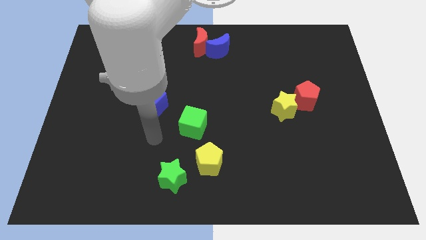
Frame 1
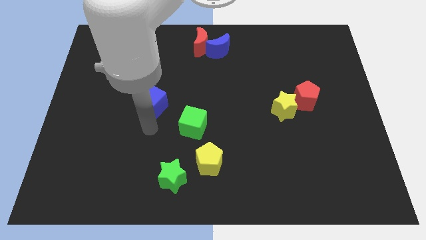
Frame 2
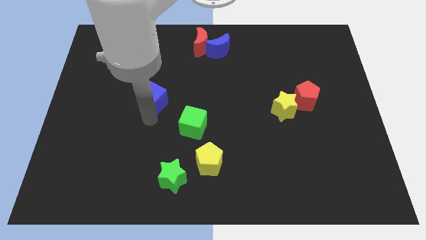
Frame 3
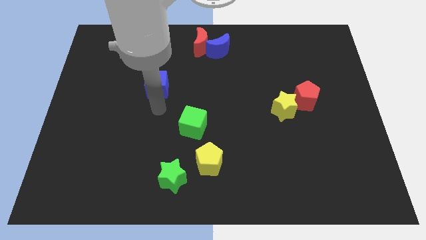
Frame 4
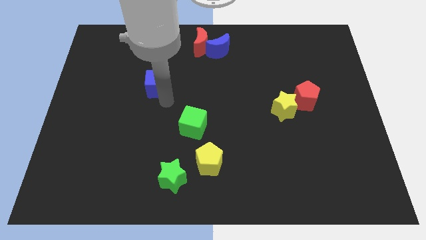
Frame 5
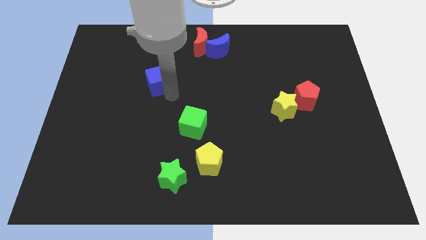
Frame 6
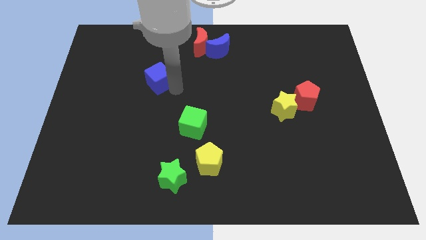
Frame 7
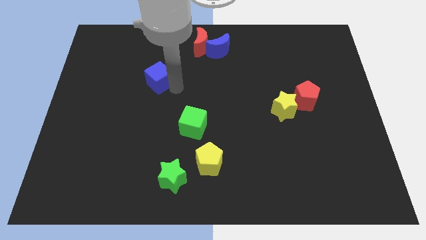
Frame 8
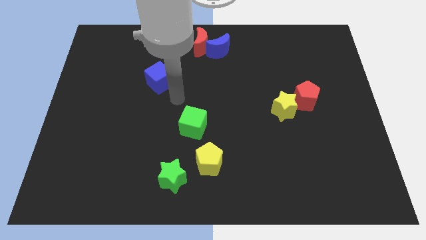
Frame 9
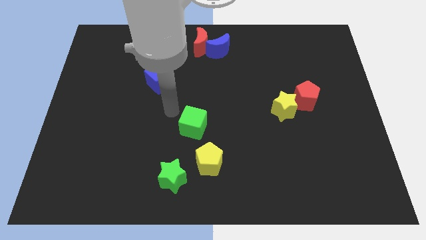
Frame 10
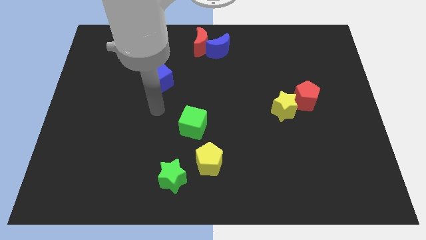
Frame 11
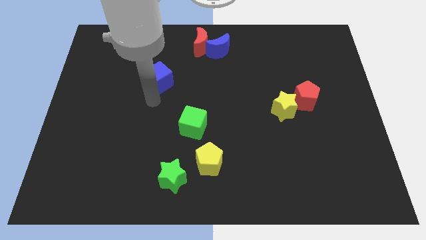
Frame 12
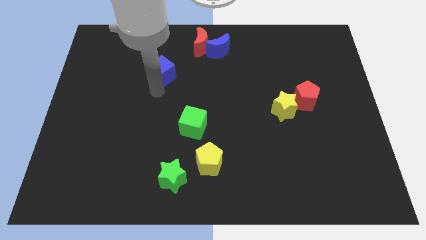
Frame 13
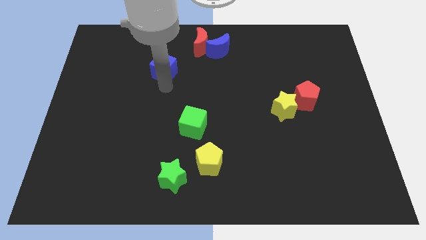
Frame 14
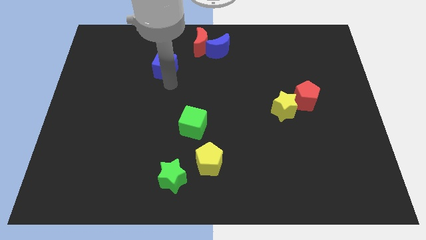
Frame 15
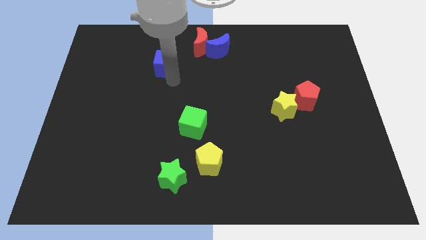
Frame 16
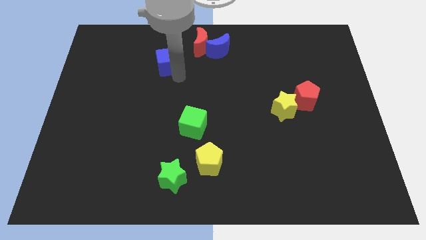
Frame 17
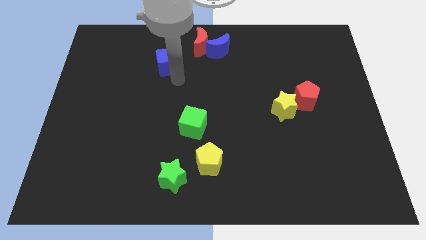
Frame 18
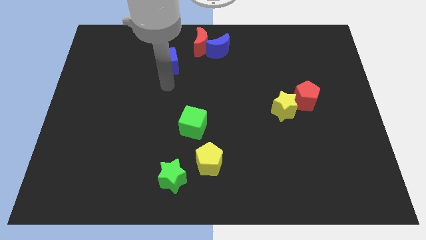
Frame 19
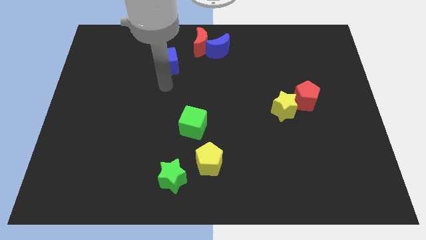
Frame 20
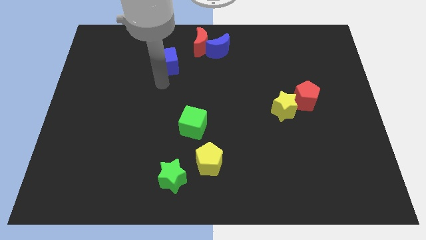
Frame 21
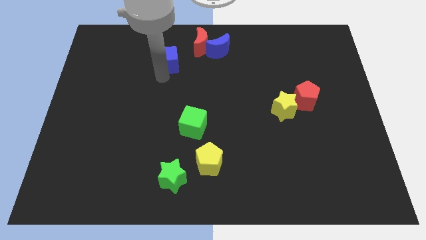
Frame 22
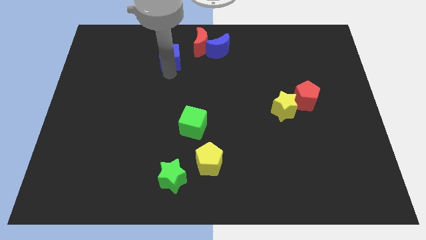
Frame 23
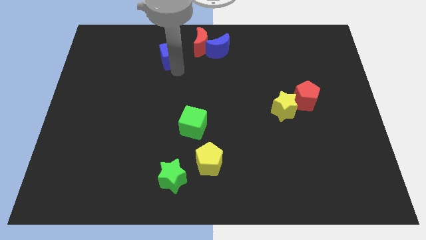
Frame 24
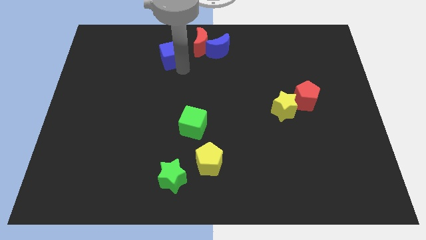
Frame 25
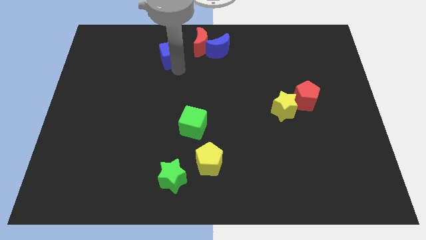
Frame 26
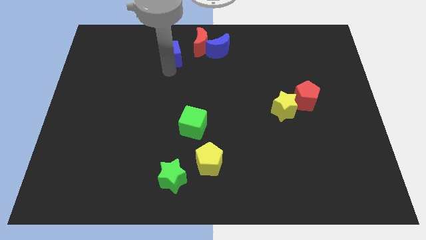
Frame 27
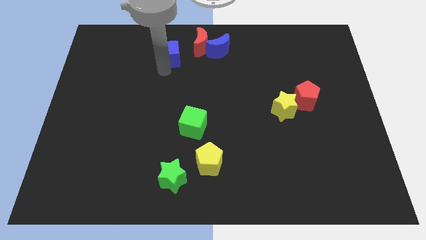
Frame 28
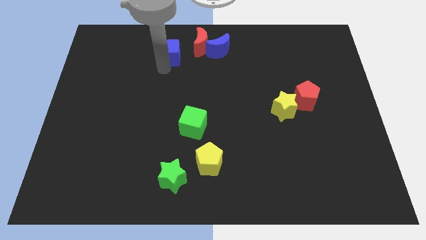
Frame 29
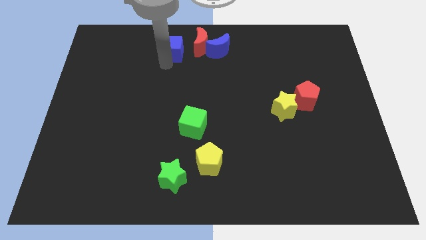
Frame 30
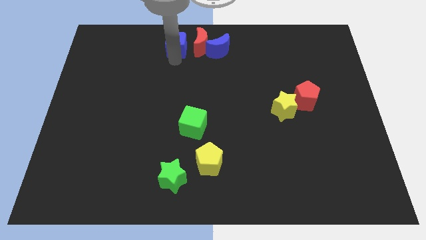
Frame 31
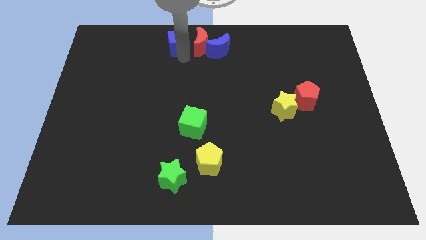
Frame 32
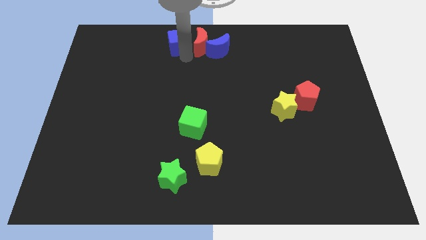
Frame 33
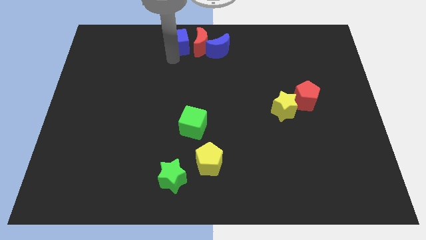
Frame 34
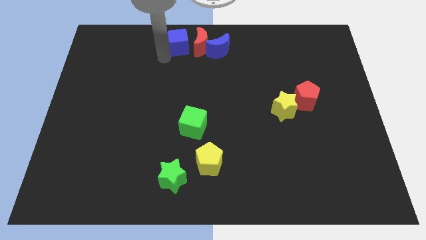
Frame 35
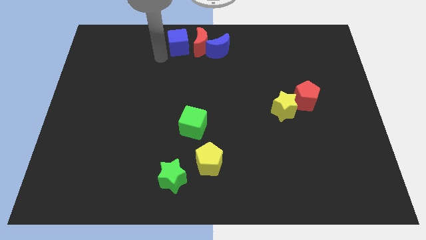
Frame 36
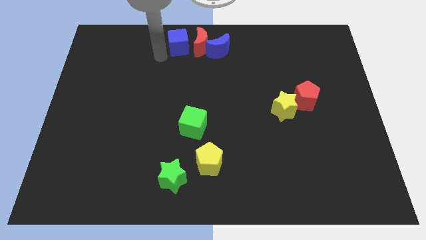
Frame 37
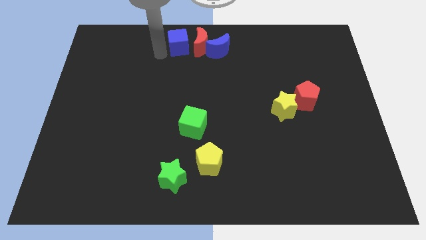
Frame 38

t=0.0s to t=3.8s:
push blue cube beside red moon

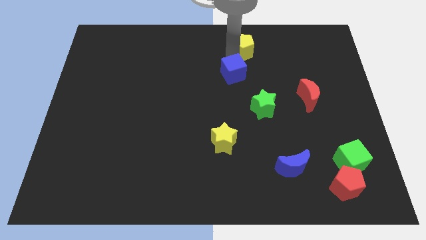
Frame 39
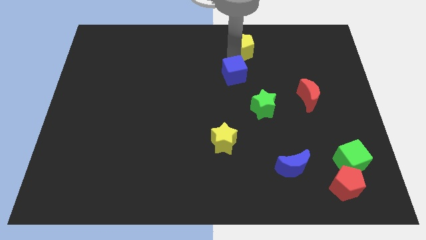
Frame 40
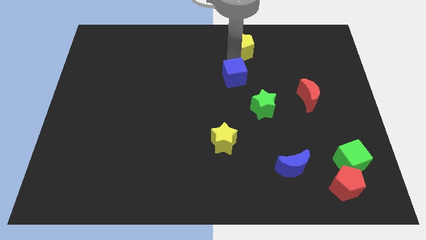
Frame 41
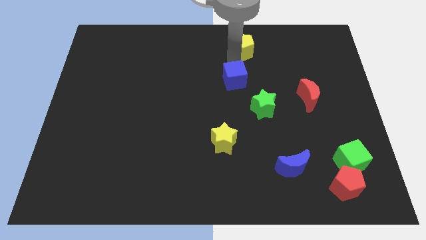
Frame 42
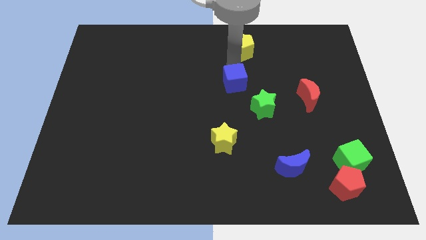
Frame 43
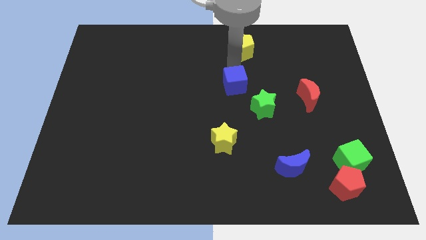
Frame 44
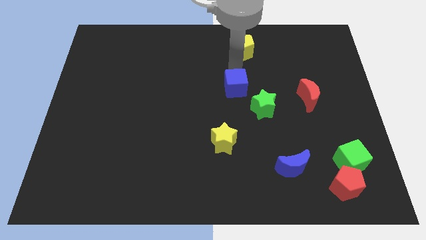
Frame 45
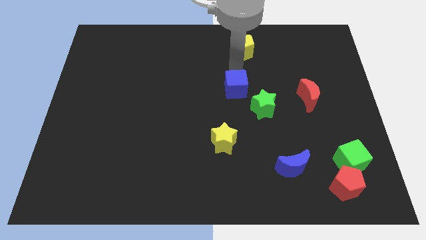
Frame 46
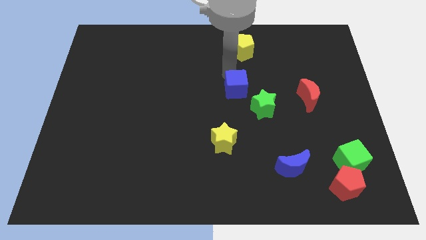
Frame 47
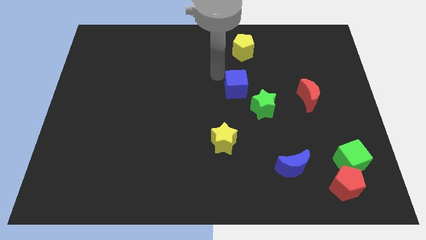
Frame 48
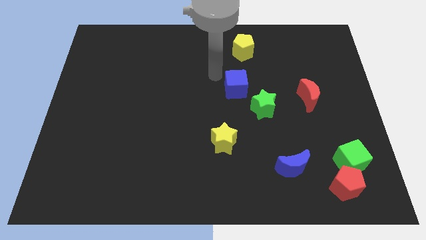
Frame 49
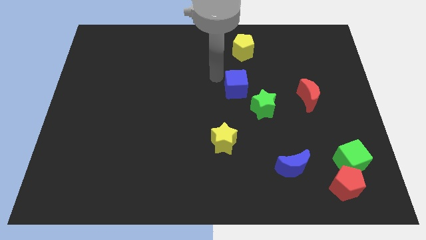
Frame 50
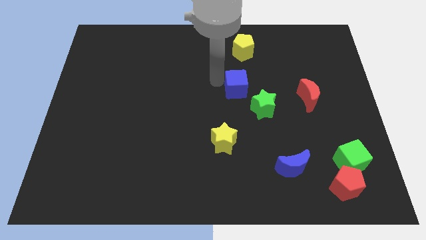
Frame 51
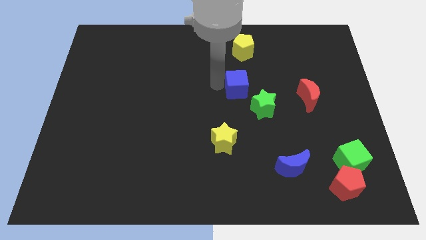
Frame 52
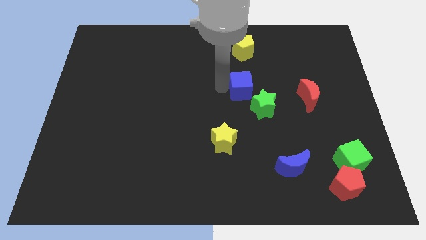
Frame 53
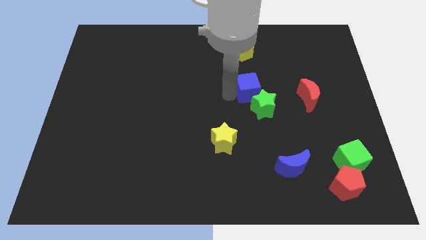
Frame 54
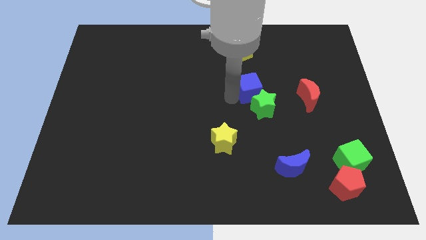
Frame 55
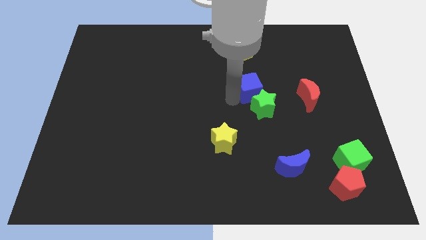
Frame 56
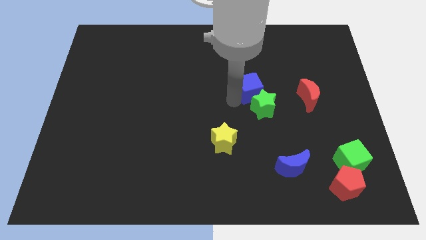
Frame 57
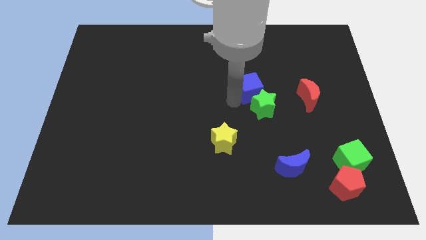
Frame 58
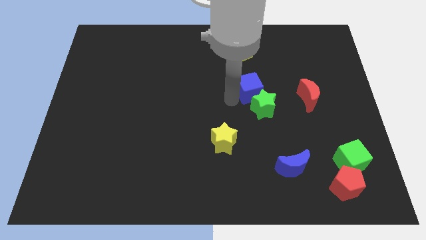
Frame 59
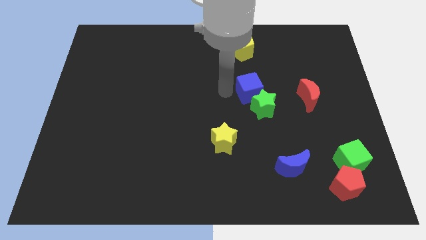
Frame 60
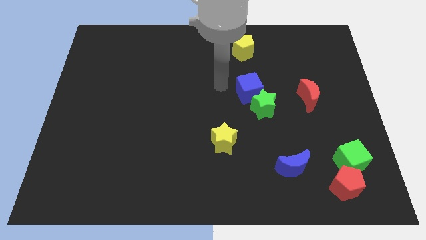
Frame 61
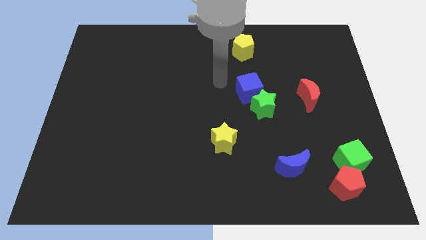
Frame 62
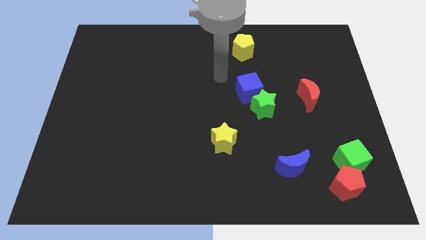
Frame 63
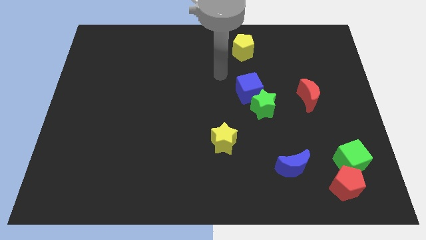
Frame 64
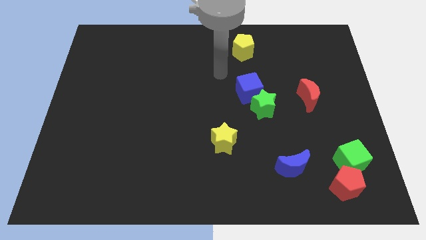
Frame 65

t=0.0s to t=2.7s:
move the blue cube into the green star

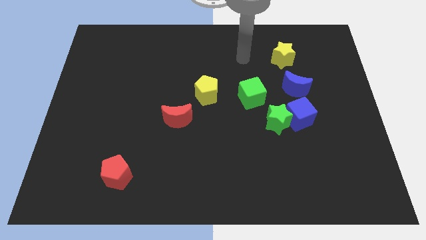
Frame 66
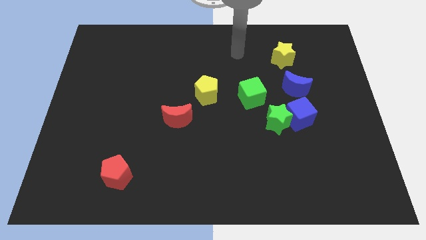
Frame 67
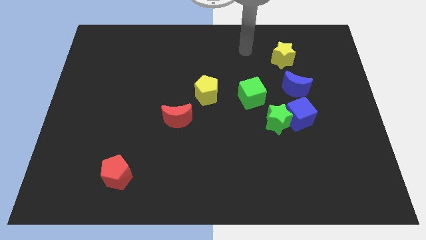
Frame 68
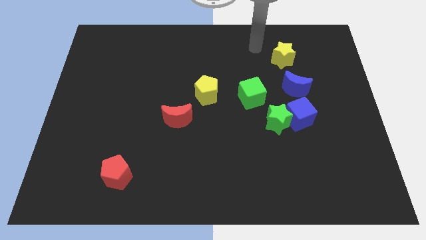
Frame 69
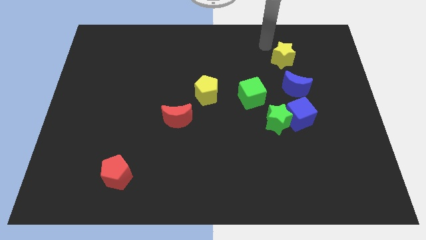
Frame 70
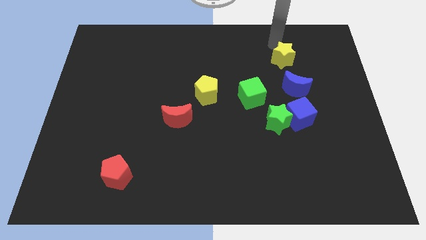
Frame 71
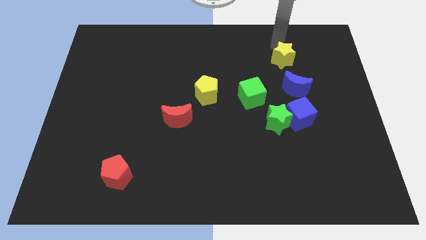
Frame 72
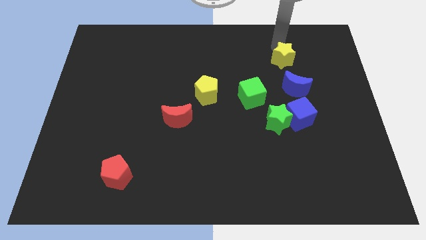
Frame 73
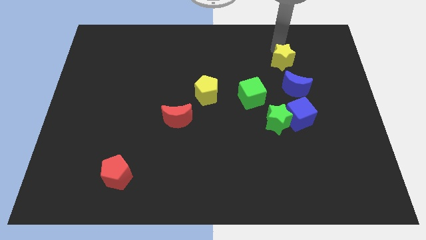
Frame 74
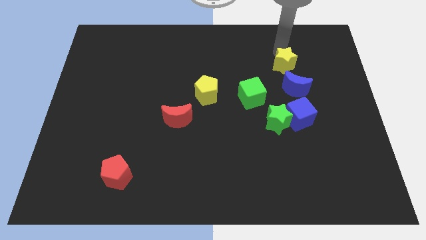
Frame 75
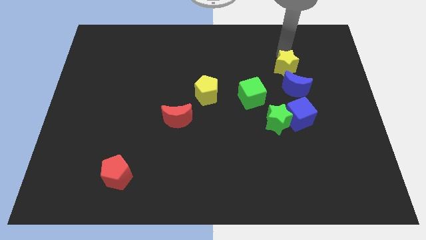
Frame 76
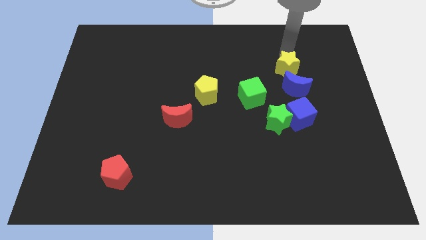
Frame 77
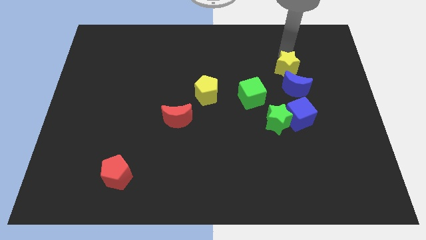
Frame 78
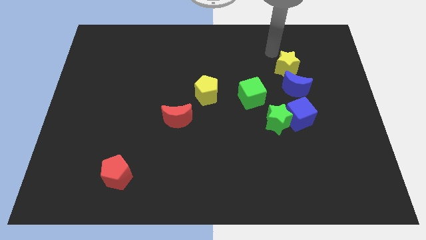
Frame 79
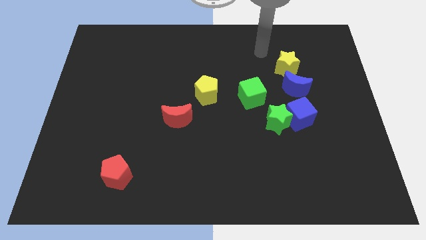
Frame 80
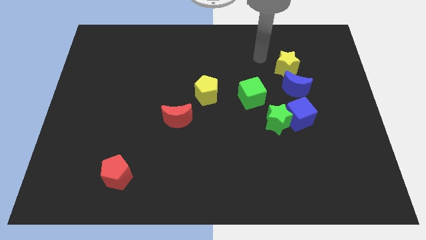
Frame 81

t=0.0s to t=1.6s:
move the yellow star close to the blue moon

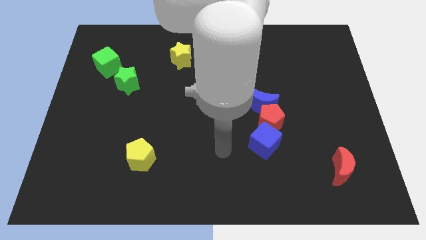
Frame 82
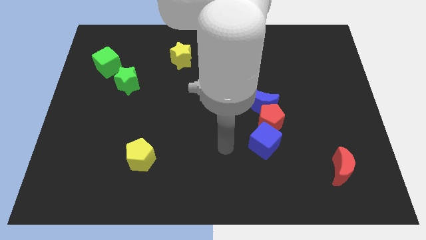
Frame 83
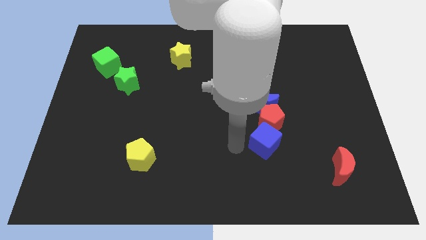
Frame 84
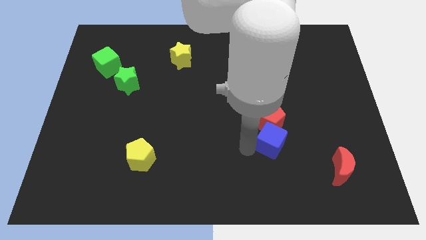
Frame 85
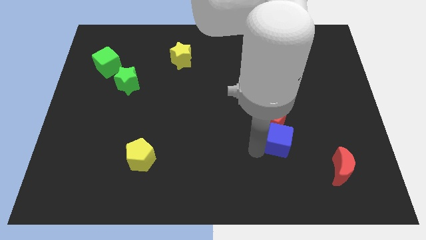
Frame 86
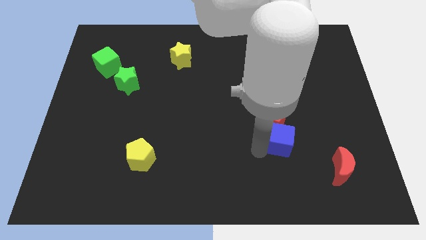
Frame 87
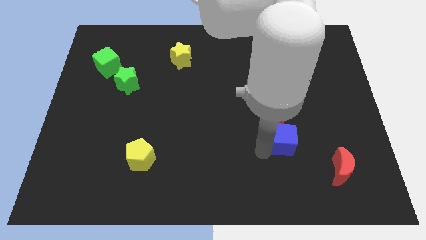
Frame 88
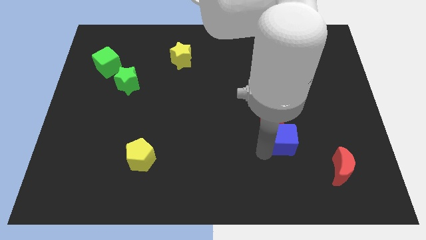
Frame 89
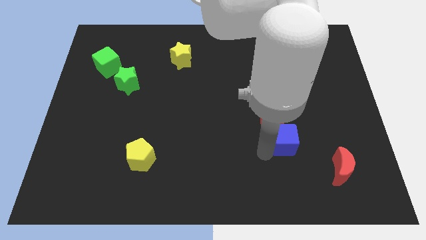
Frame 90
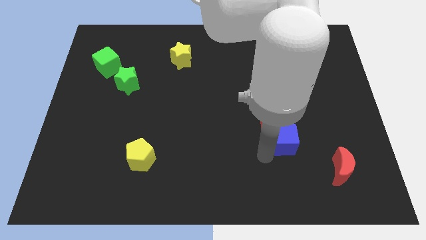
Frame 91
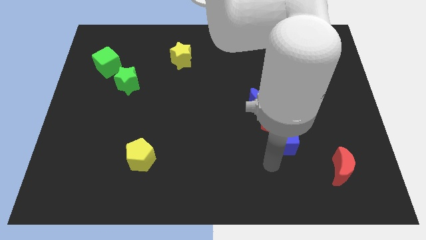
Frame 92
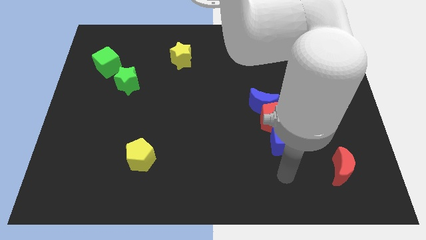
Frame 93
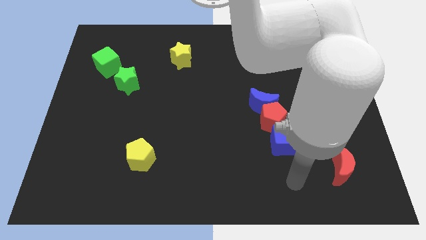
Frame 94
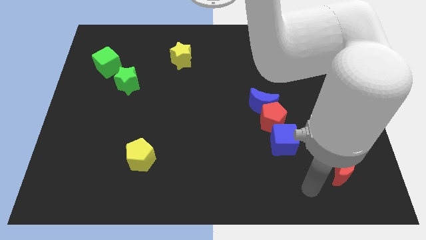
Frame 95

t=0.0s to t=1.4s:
push the blue cube slightly to the right side of the board
